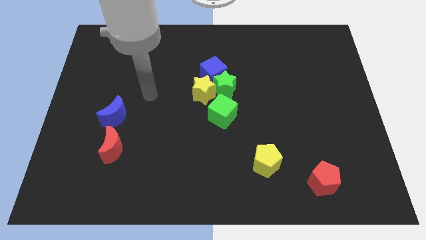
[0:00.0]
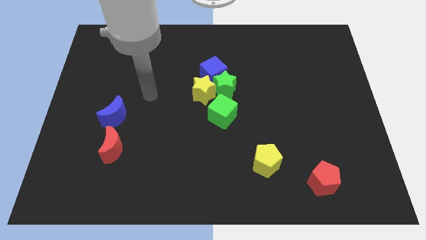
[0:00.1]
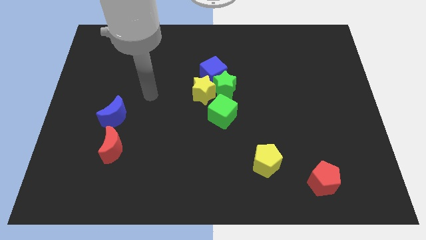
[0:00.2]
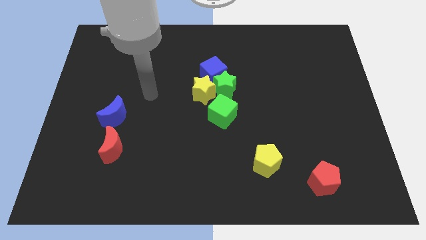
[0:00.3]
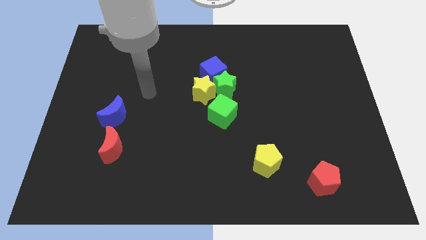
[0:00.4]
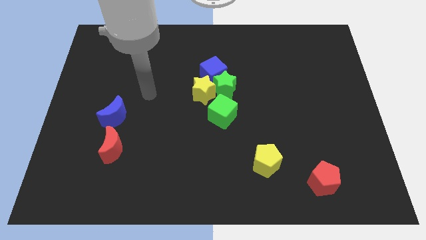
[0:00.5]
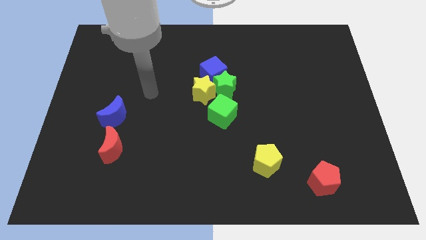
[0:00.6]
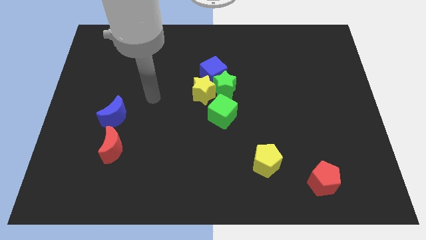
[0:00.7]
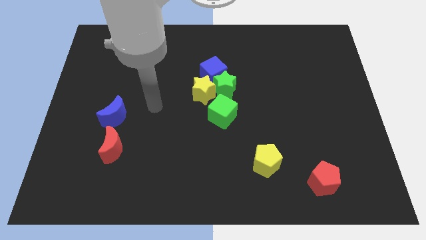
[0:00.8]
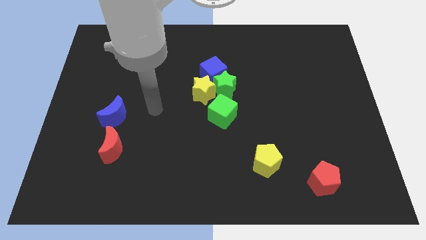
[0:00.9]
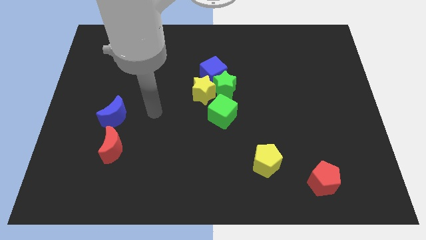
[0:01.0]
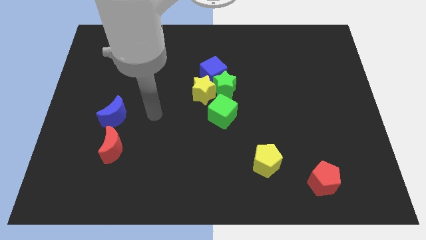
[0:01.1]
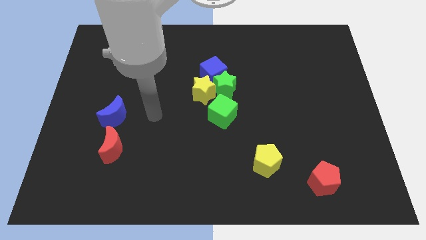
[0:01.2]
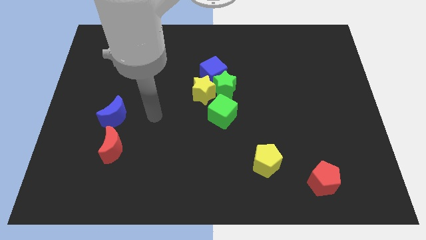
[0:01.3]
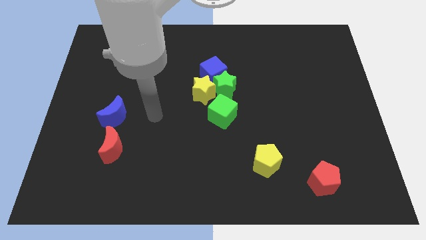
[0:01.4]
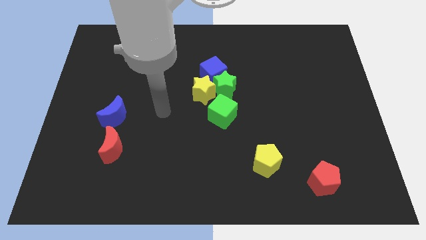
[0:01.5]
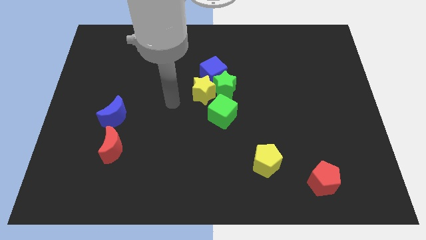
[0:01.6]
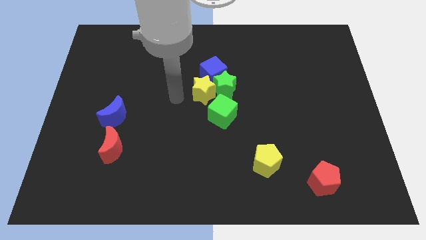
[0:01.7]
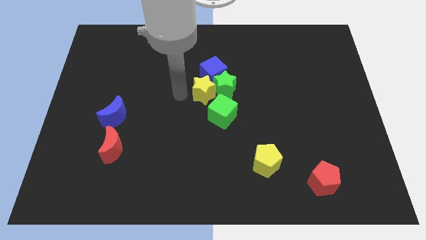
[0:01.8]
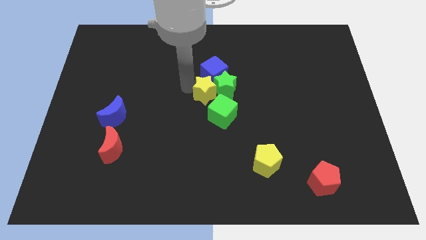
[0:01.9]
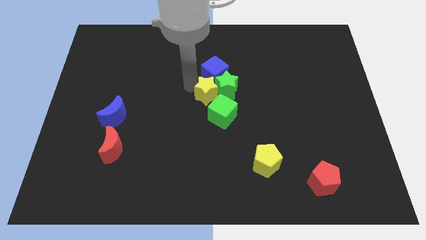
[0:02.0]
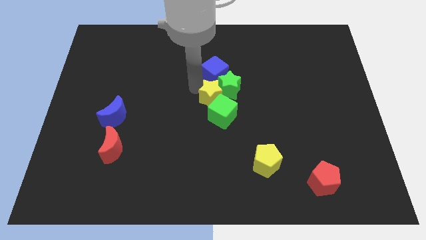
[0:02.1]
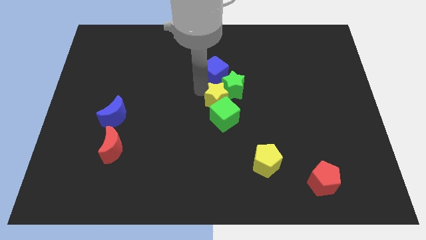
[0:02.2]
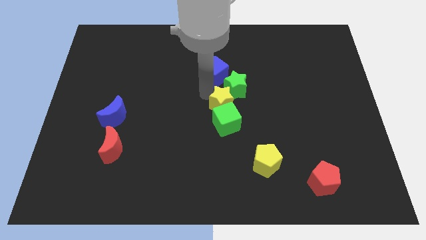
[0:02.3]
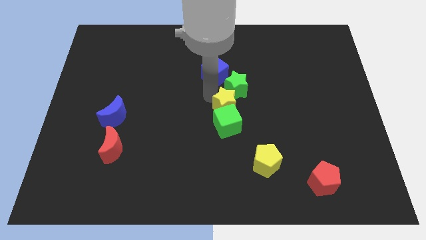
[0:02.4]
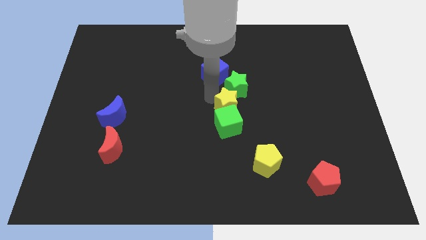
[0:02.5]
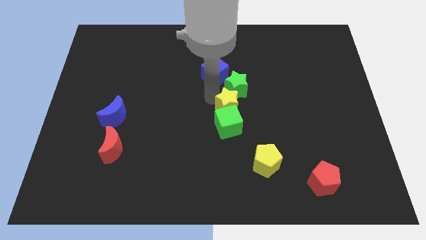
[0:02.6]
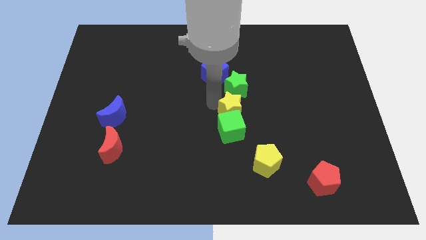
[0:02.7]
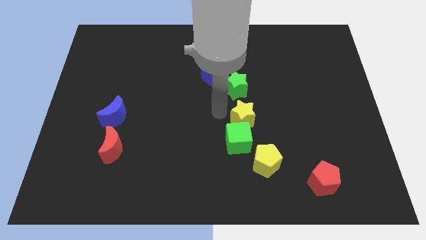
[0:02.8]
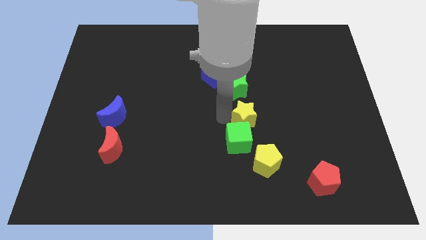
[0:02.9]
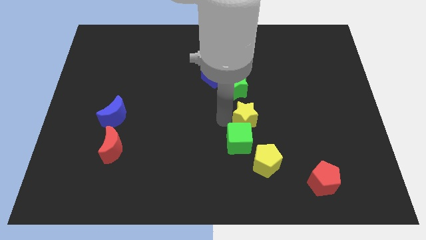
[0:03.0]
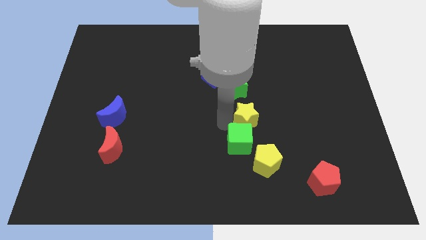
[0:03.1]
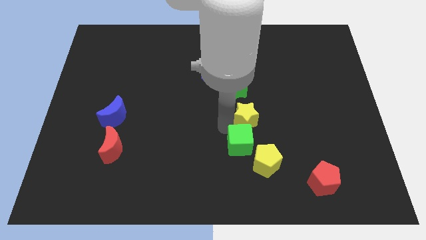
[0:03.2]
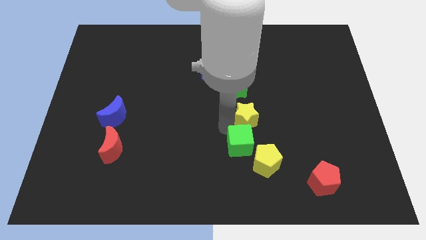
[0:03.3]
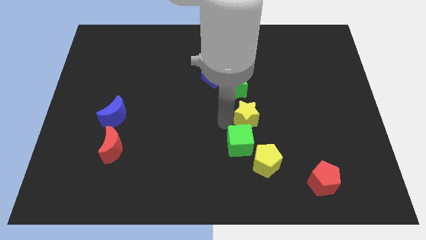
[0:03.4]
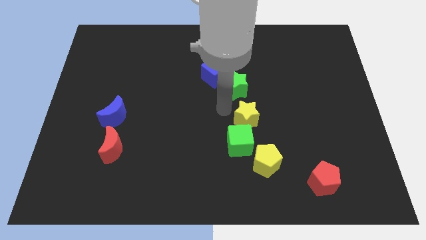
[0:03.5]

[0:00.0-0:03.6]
move the yellow star to the top side of the green cube

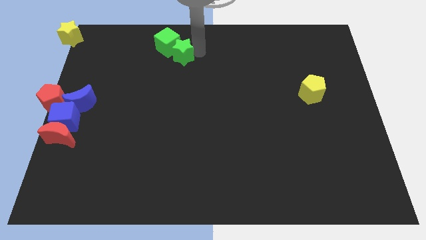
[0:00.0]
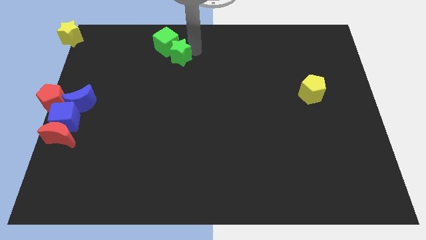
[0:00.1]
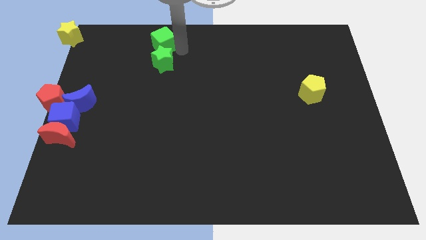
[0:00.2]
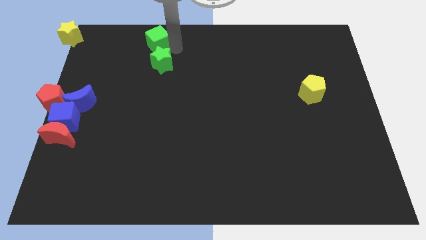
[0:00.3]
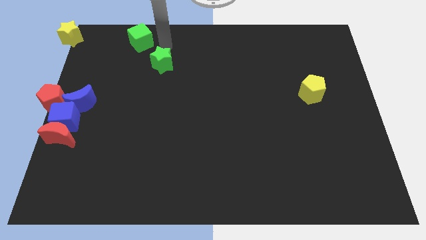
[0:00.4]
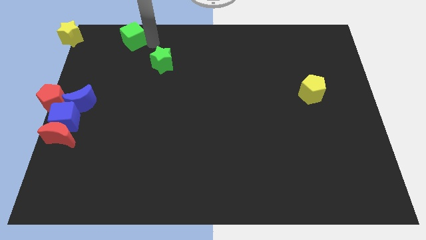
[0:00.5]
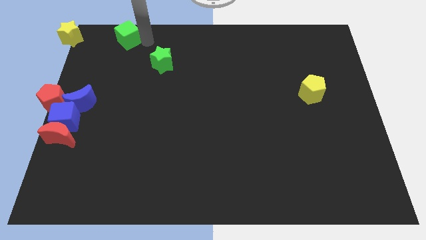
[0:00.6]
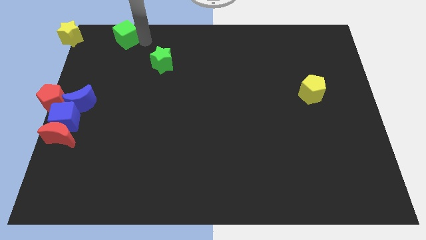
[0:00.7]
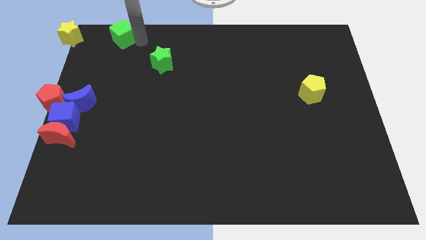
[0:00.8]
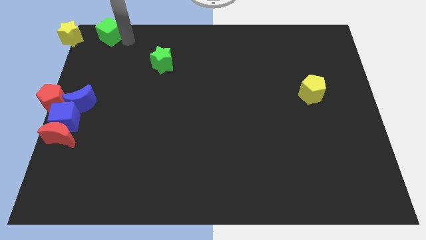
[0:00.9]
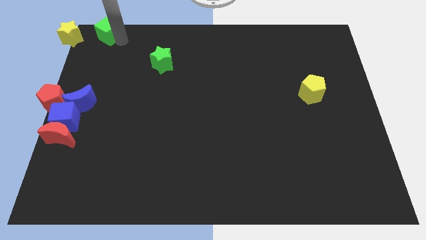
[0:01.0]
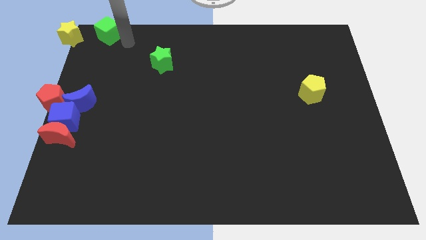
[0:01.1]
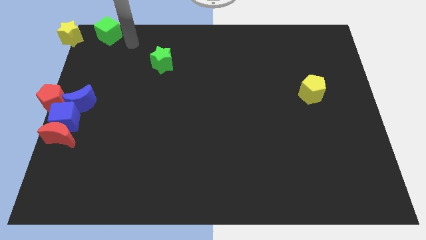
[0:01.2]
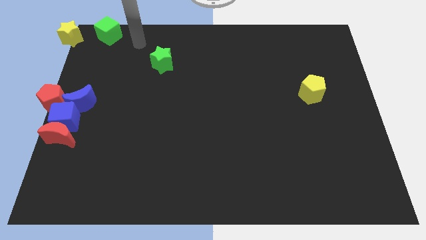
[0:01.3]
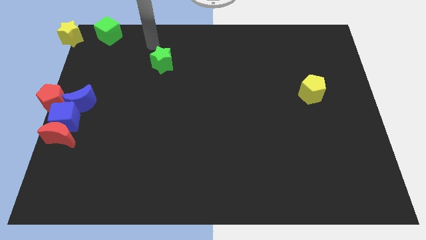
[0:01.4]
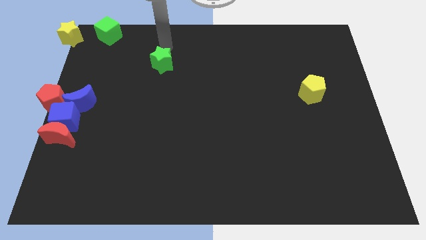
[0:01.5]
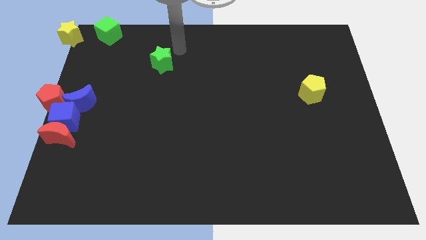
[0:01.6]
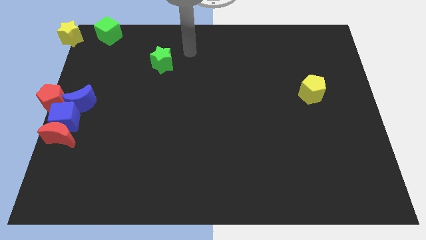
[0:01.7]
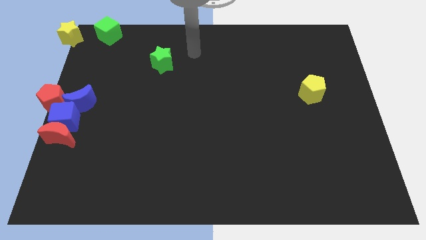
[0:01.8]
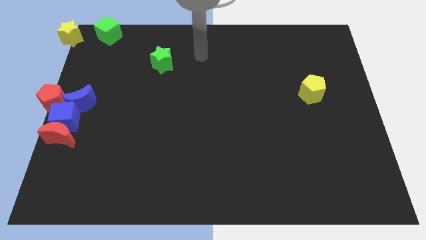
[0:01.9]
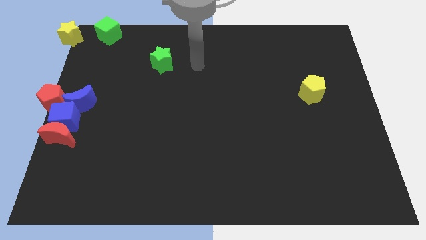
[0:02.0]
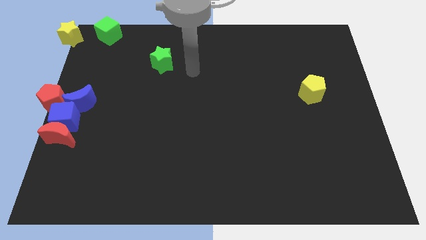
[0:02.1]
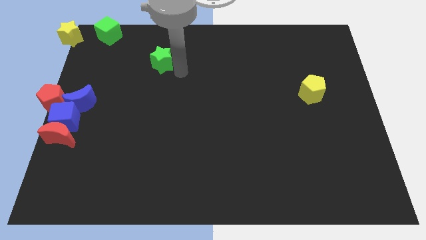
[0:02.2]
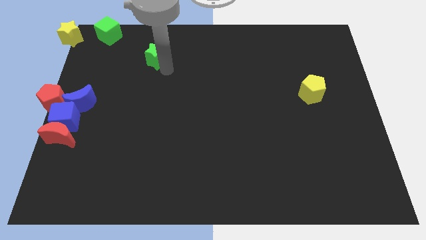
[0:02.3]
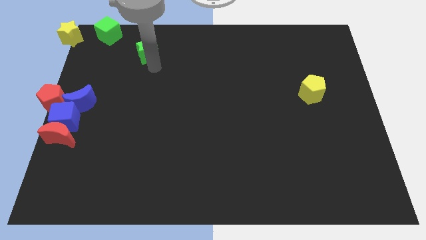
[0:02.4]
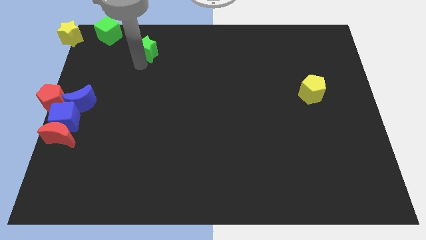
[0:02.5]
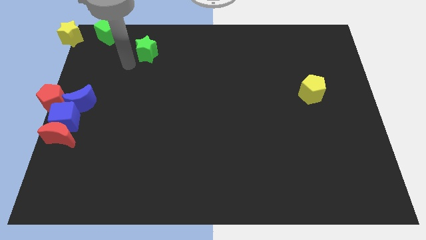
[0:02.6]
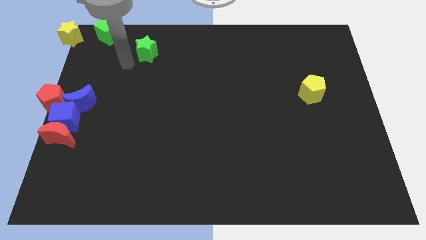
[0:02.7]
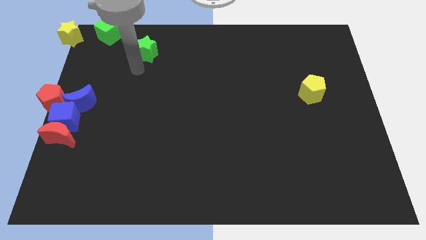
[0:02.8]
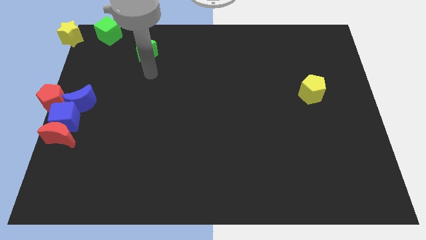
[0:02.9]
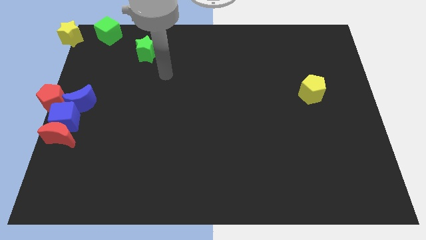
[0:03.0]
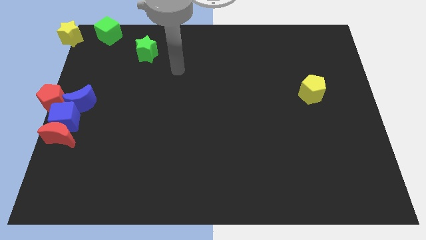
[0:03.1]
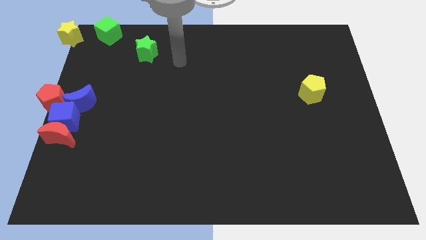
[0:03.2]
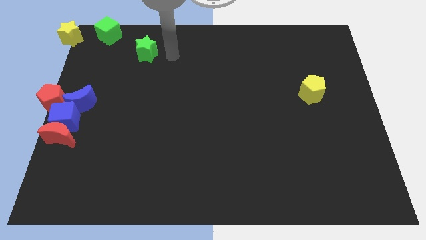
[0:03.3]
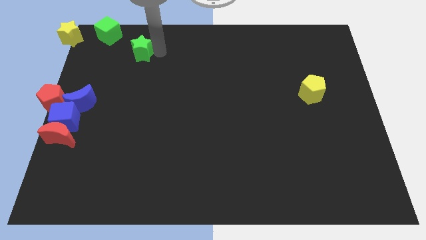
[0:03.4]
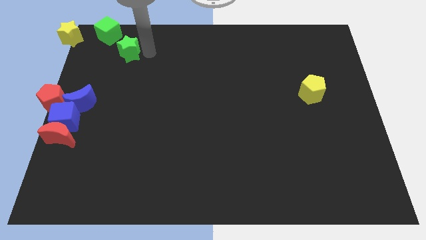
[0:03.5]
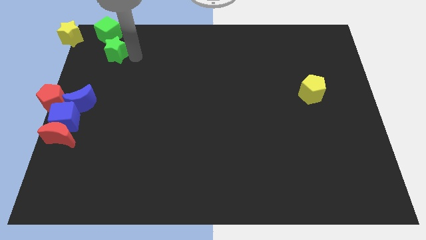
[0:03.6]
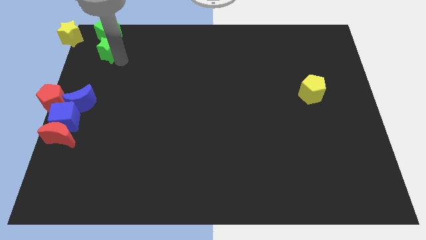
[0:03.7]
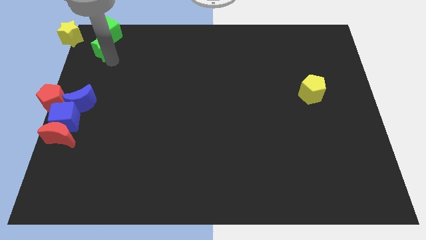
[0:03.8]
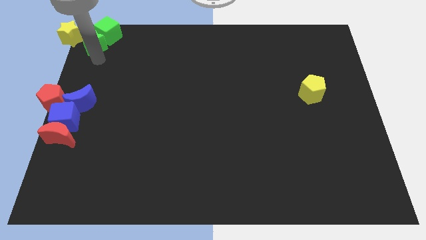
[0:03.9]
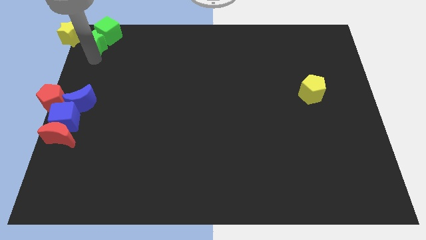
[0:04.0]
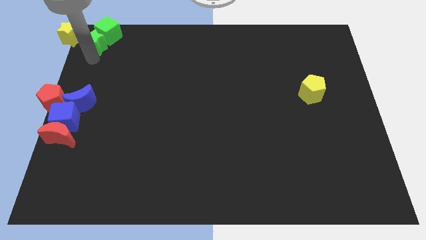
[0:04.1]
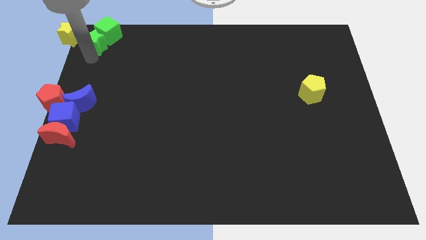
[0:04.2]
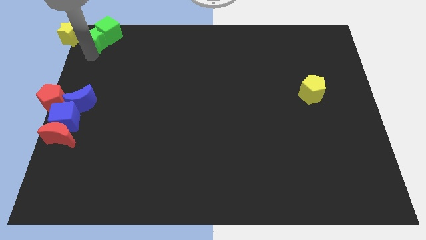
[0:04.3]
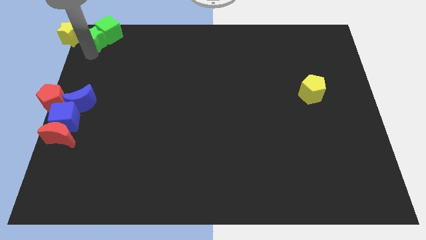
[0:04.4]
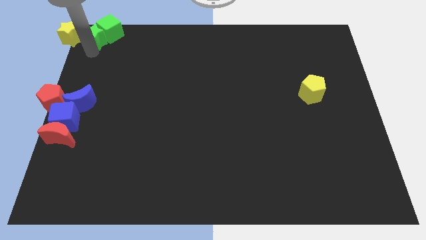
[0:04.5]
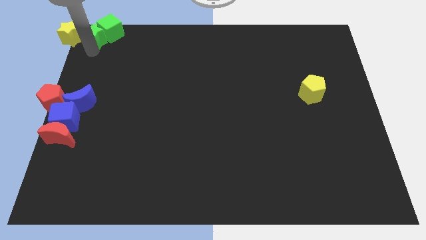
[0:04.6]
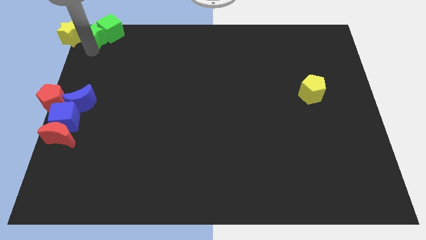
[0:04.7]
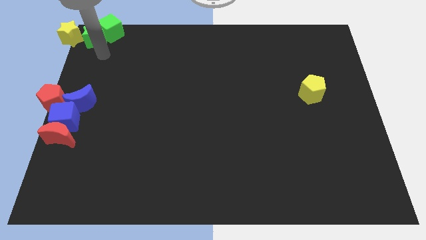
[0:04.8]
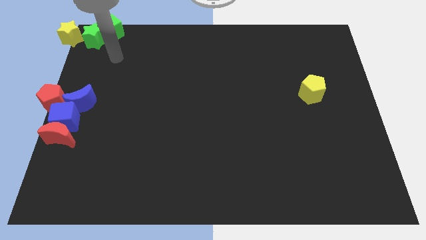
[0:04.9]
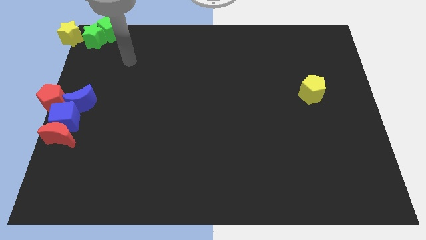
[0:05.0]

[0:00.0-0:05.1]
place the green star and green cube to the right of the yellow star

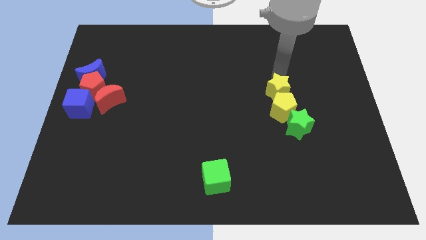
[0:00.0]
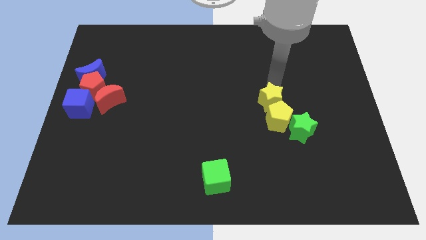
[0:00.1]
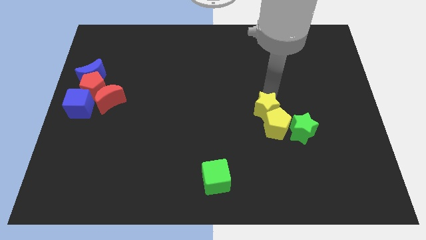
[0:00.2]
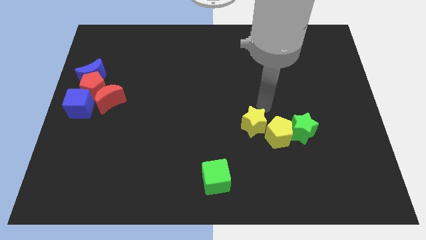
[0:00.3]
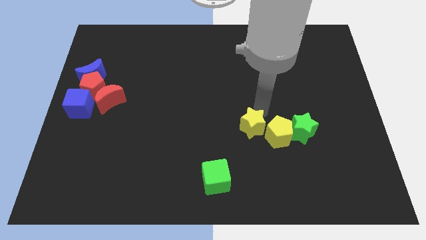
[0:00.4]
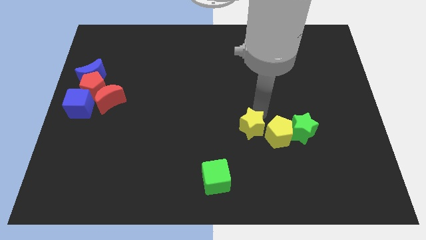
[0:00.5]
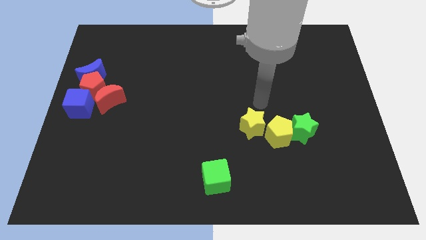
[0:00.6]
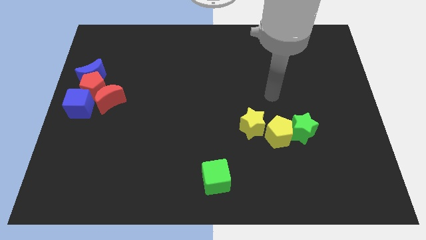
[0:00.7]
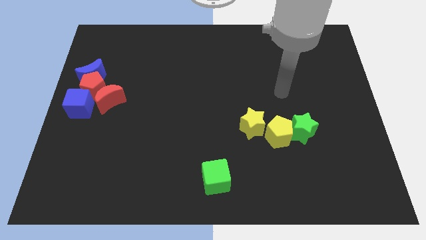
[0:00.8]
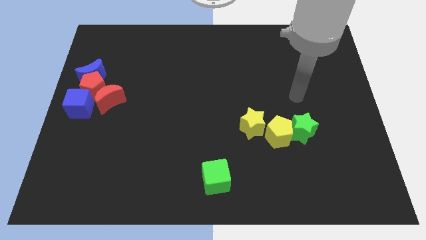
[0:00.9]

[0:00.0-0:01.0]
place yellow star to the left of yellow pentagon
